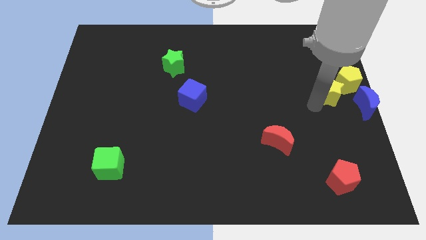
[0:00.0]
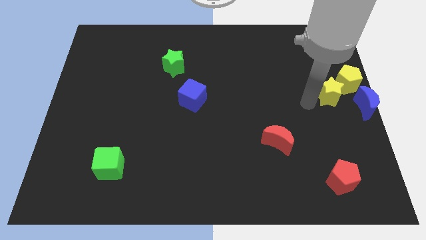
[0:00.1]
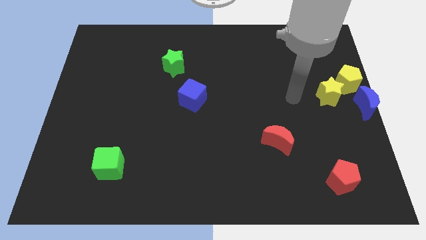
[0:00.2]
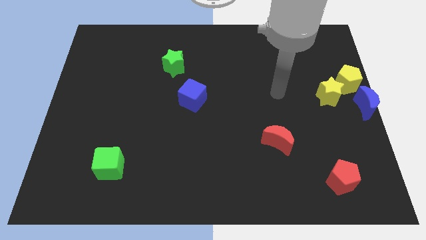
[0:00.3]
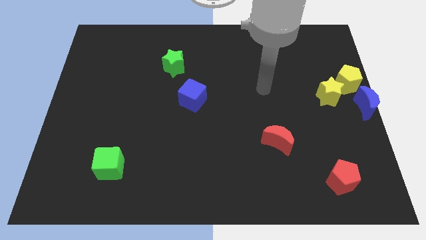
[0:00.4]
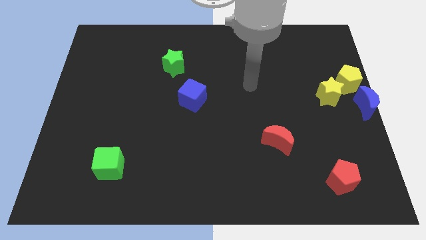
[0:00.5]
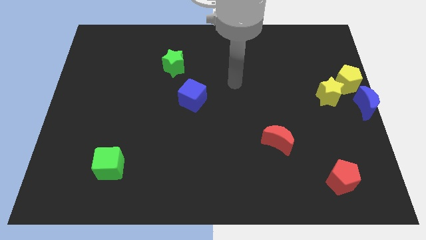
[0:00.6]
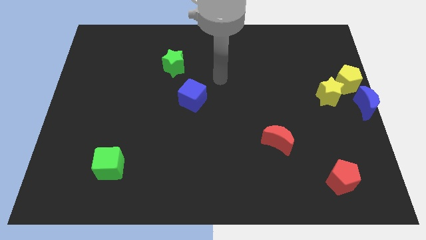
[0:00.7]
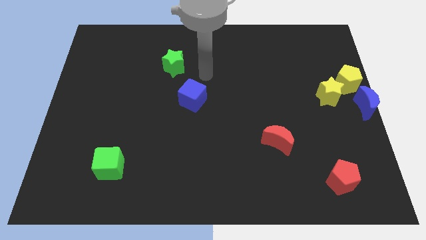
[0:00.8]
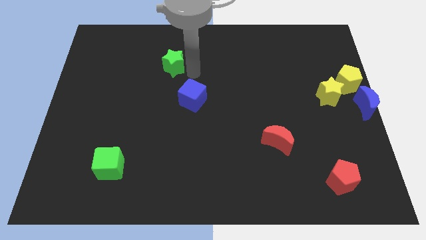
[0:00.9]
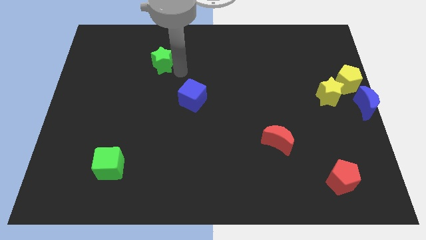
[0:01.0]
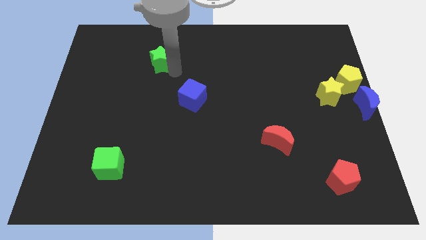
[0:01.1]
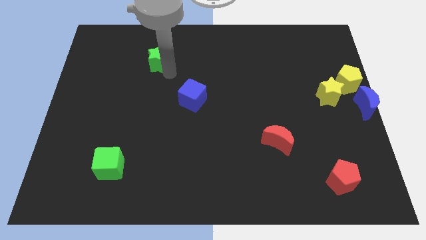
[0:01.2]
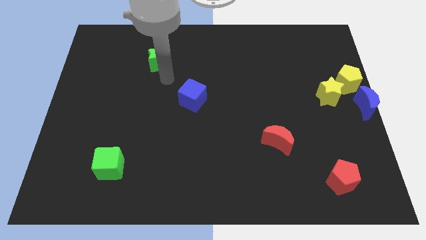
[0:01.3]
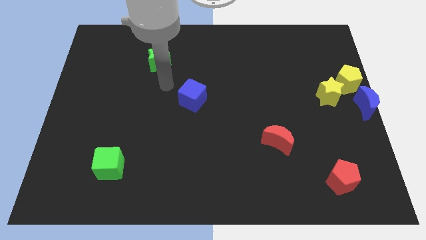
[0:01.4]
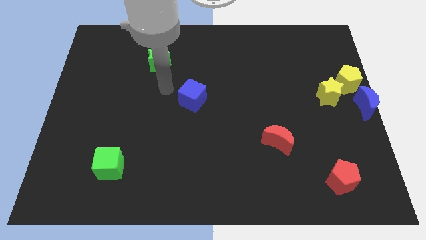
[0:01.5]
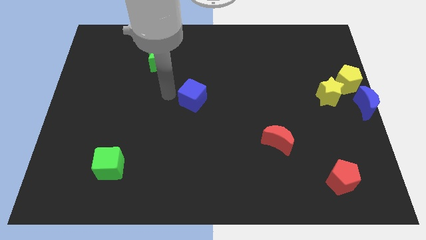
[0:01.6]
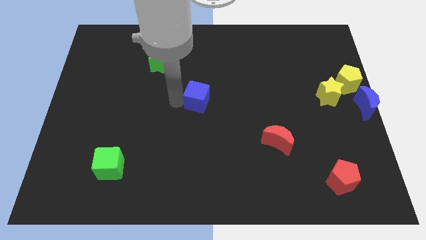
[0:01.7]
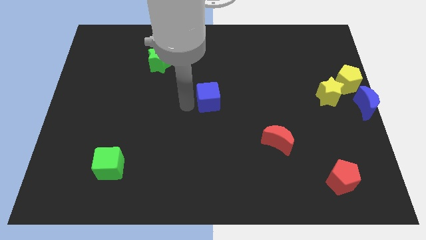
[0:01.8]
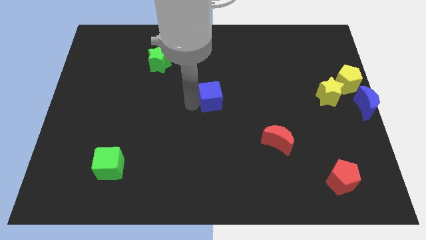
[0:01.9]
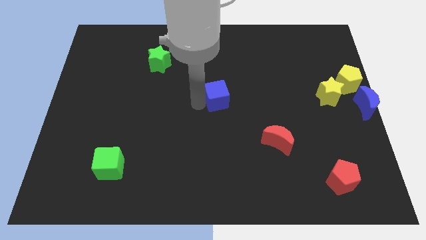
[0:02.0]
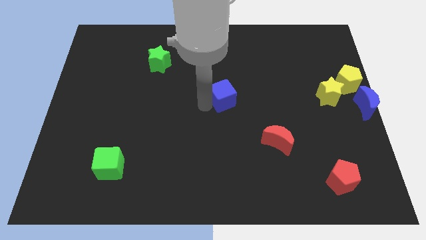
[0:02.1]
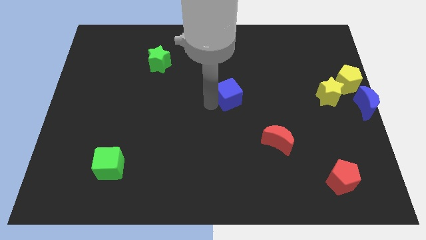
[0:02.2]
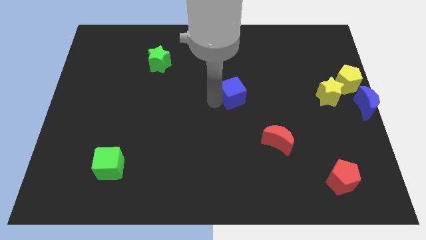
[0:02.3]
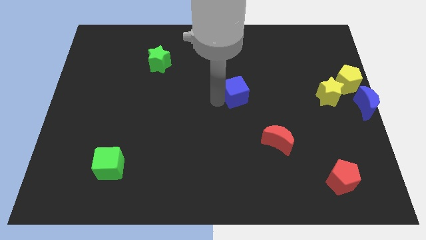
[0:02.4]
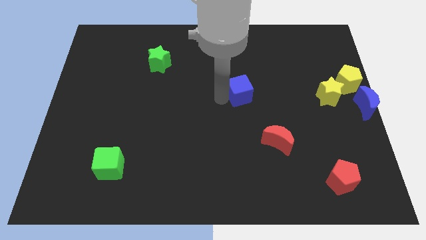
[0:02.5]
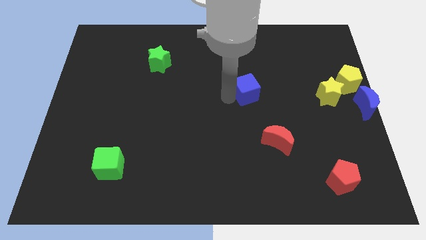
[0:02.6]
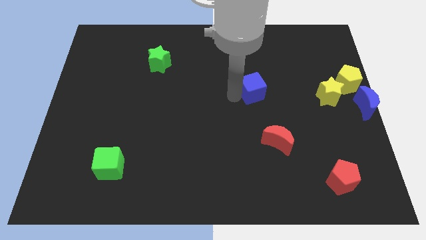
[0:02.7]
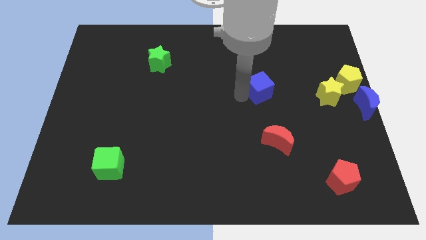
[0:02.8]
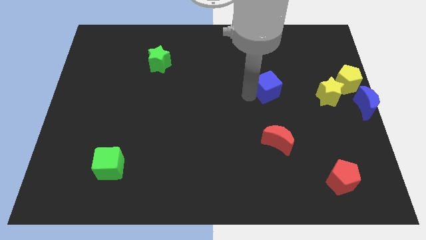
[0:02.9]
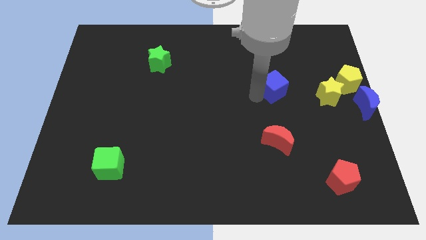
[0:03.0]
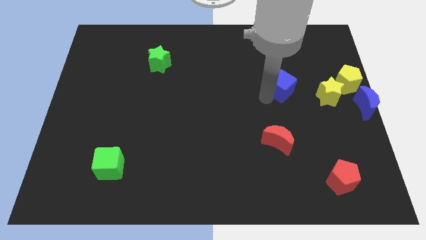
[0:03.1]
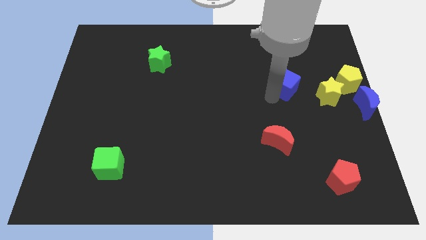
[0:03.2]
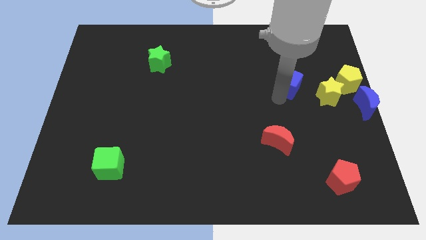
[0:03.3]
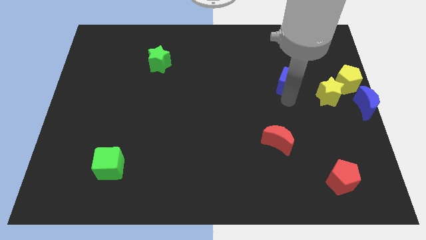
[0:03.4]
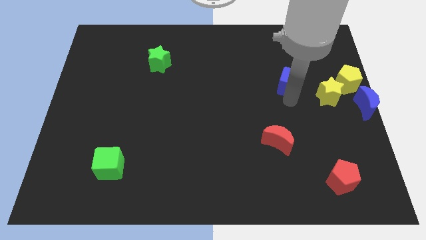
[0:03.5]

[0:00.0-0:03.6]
move the blue cube diagonally top left to the yellow star

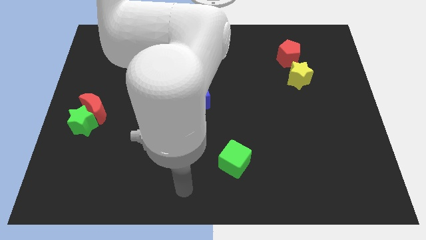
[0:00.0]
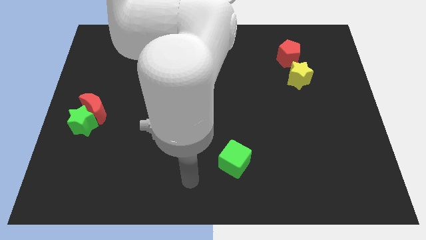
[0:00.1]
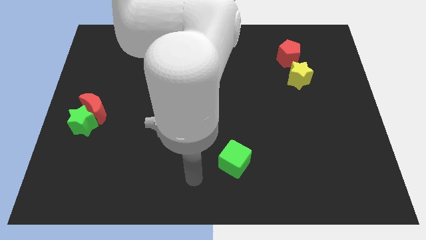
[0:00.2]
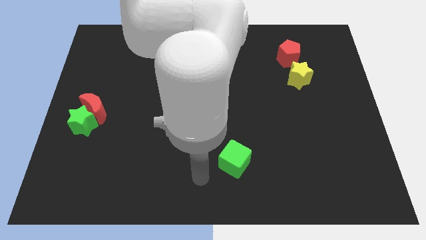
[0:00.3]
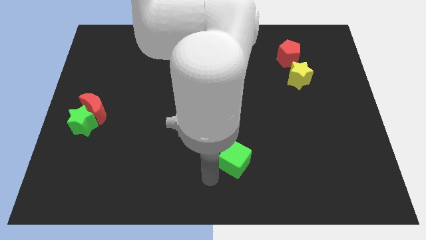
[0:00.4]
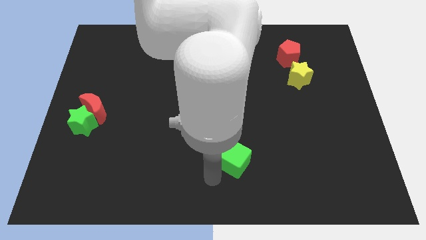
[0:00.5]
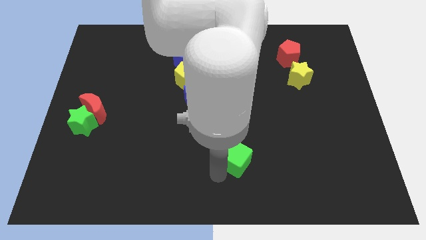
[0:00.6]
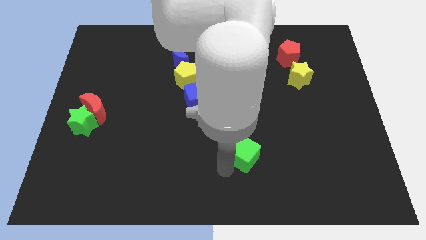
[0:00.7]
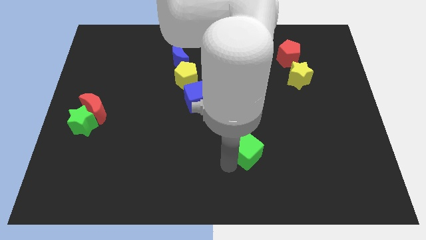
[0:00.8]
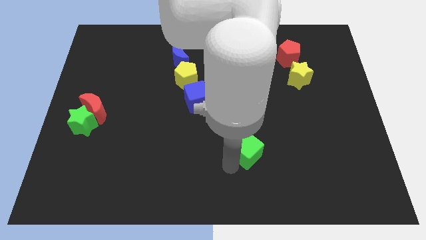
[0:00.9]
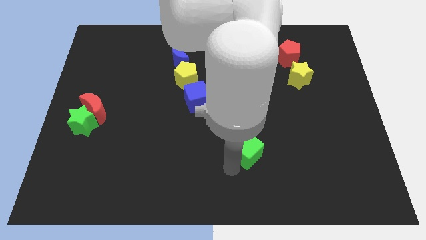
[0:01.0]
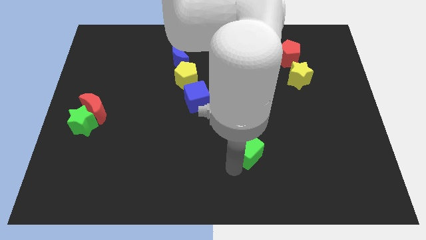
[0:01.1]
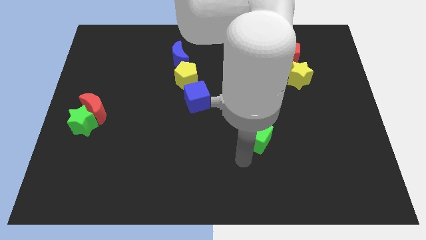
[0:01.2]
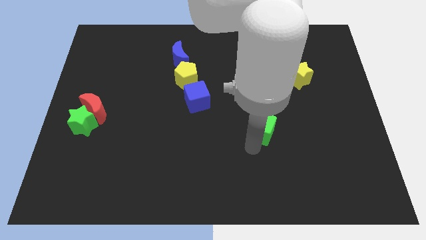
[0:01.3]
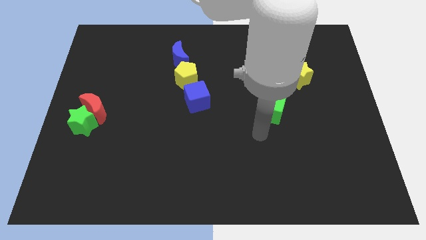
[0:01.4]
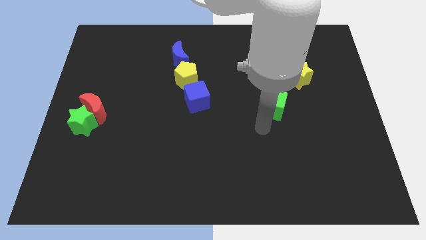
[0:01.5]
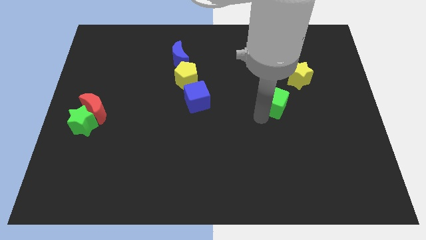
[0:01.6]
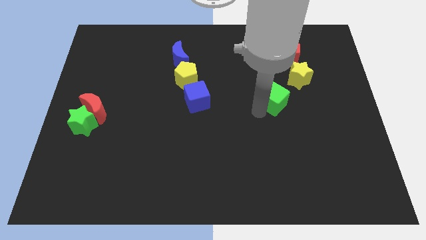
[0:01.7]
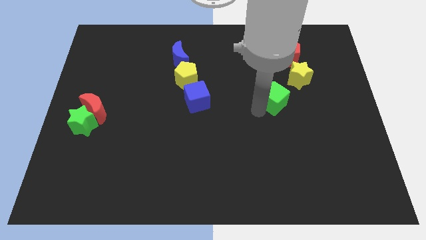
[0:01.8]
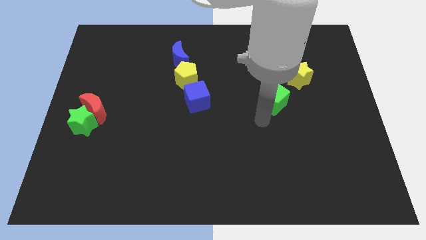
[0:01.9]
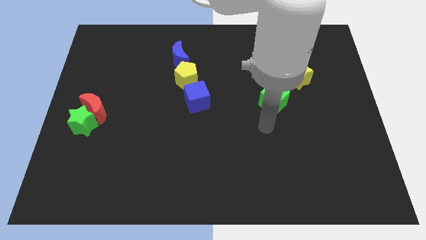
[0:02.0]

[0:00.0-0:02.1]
slide the green cube to the diagonal bottom left of the yellow star

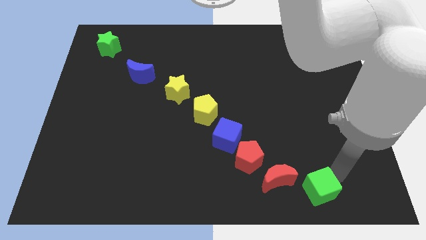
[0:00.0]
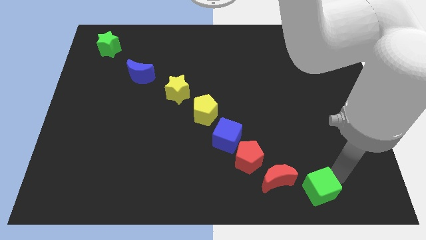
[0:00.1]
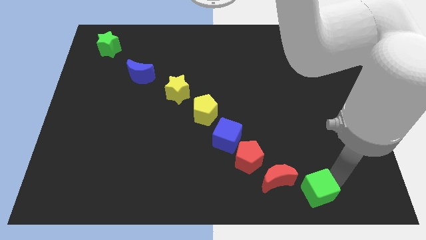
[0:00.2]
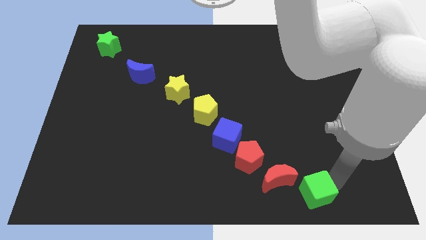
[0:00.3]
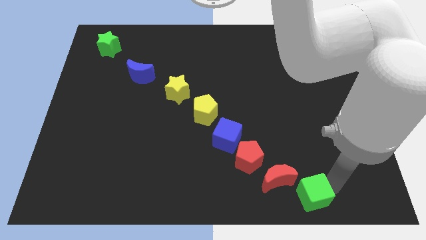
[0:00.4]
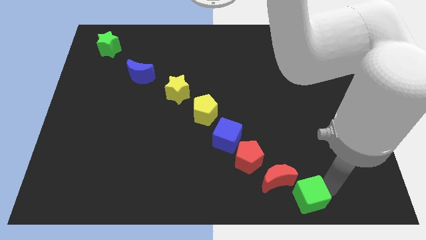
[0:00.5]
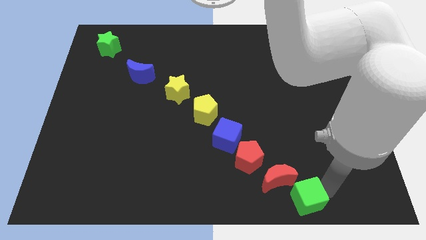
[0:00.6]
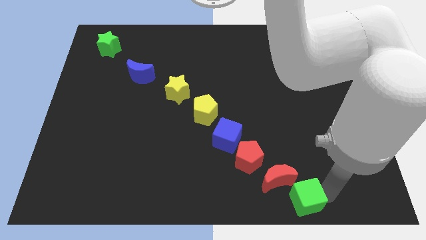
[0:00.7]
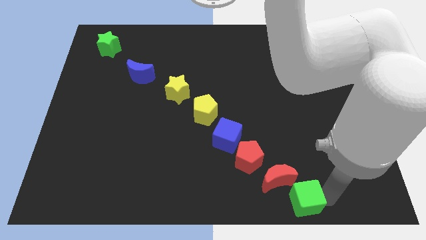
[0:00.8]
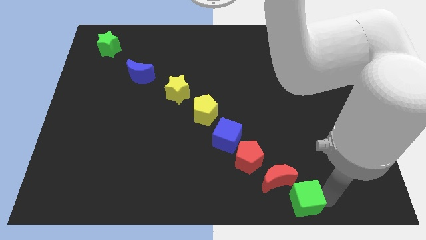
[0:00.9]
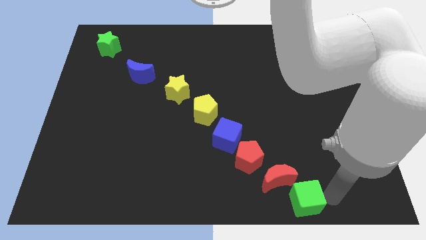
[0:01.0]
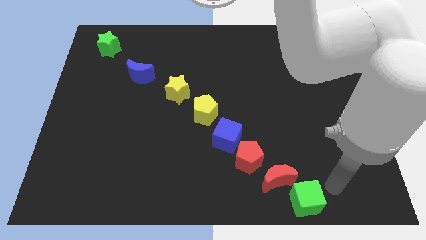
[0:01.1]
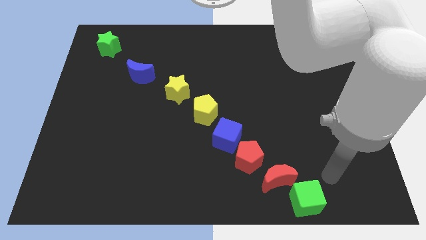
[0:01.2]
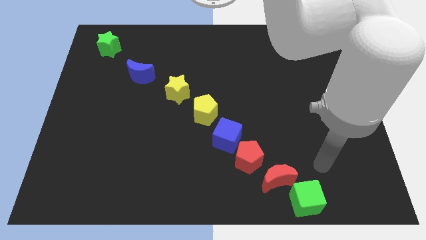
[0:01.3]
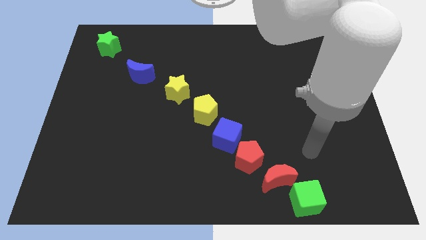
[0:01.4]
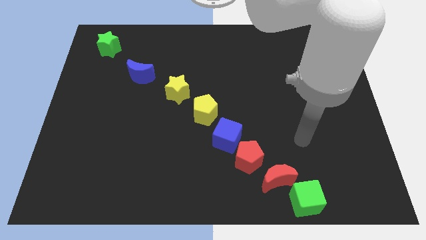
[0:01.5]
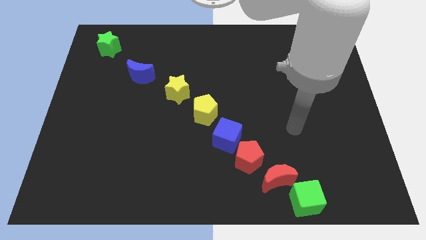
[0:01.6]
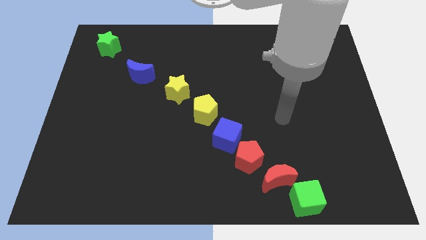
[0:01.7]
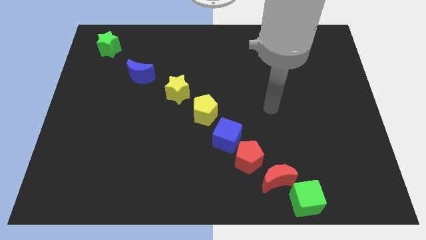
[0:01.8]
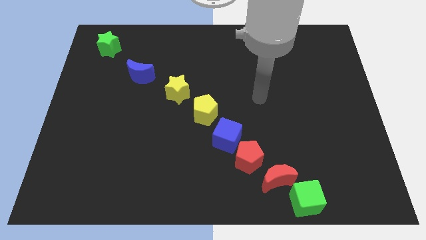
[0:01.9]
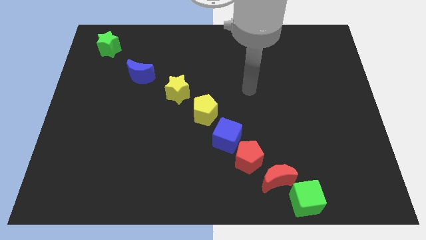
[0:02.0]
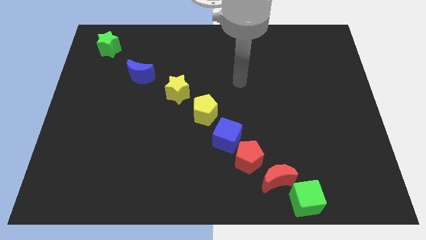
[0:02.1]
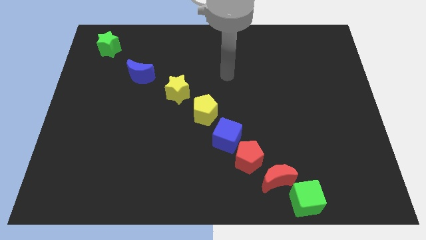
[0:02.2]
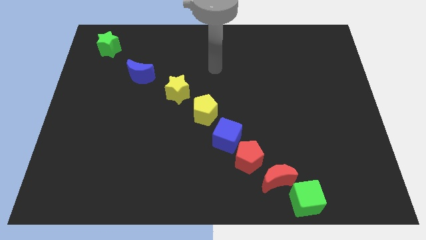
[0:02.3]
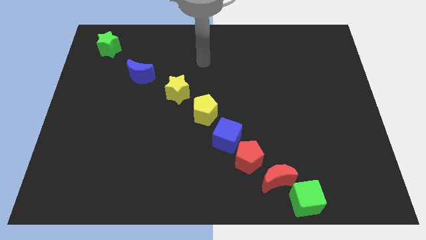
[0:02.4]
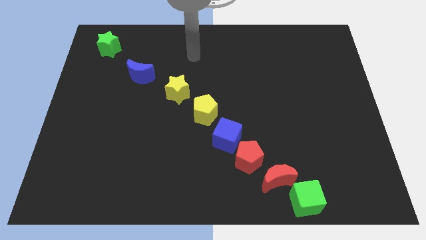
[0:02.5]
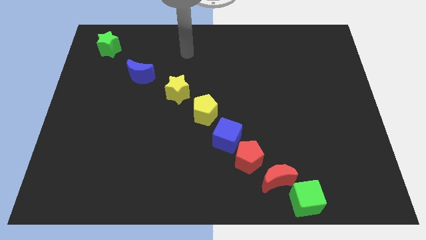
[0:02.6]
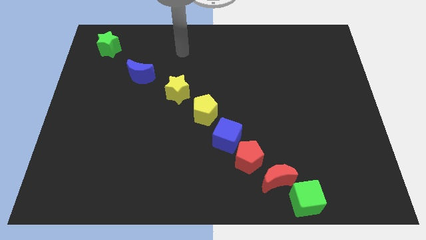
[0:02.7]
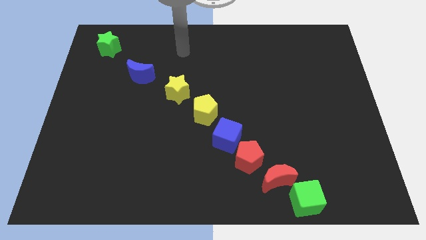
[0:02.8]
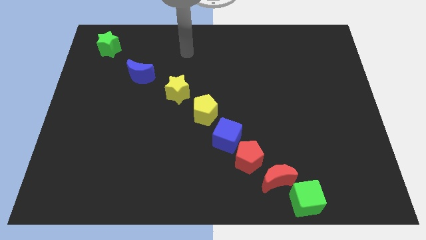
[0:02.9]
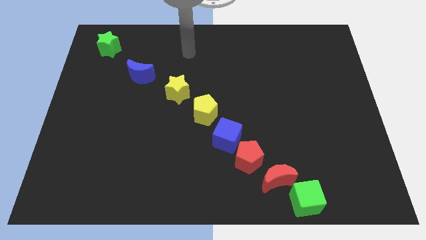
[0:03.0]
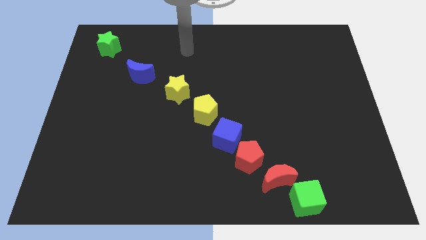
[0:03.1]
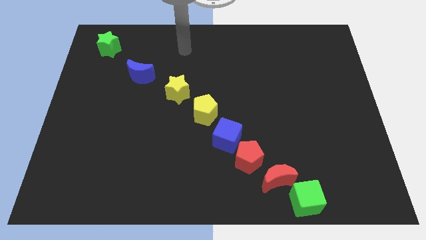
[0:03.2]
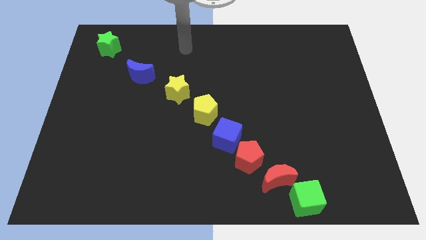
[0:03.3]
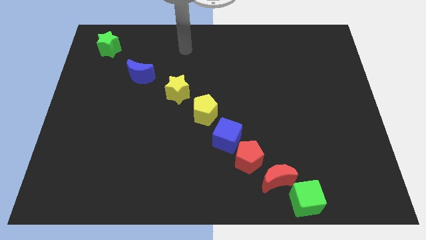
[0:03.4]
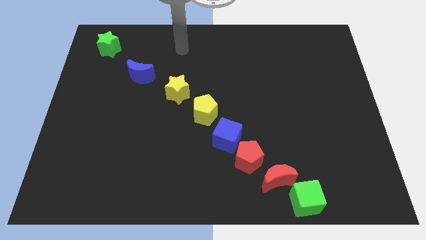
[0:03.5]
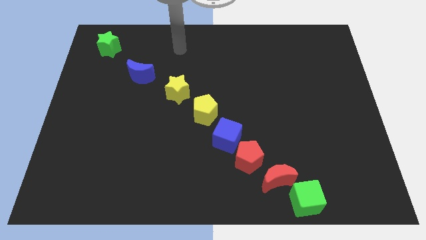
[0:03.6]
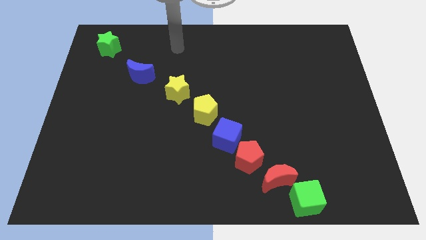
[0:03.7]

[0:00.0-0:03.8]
move your arm to the right of the blue moon
